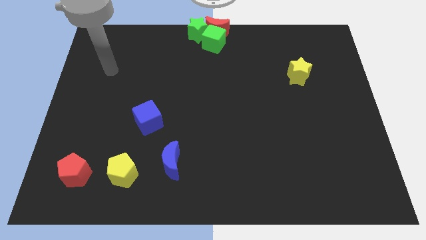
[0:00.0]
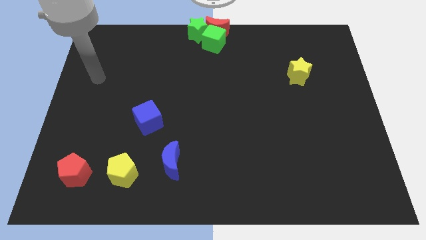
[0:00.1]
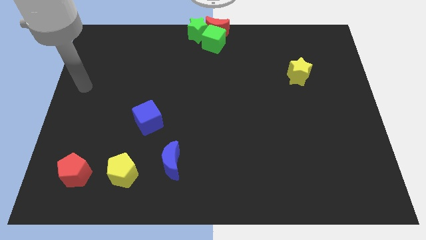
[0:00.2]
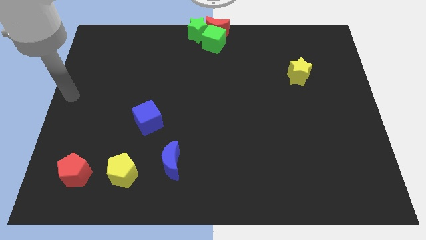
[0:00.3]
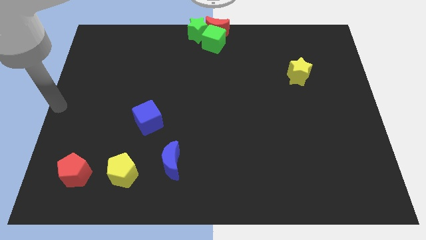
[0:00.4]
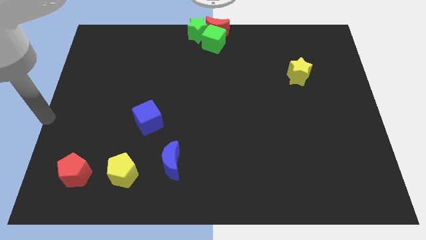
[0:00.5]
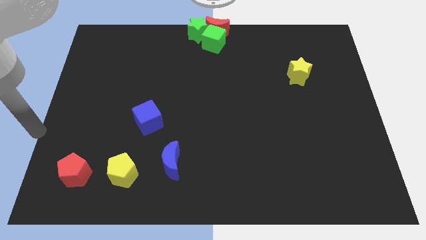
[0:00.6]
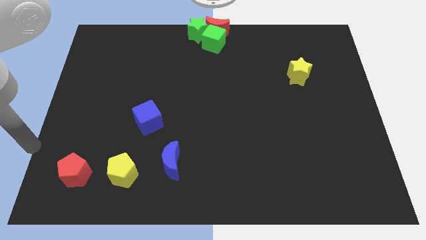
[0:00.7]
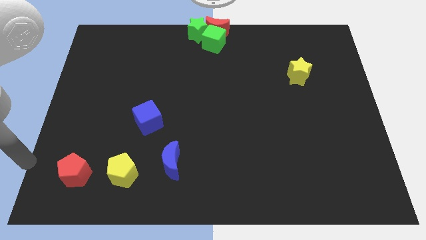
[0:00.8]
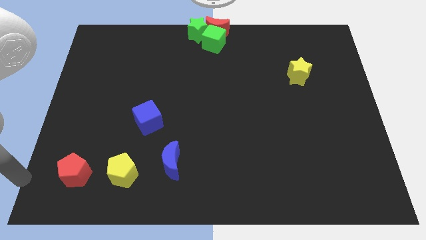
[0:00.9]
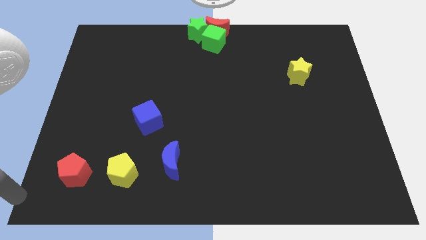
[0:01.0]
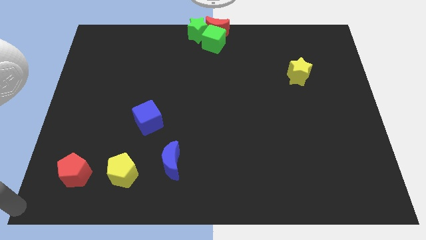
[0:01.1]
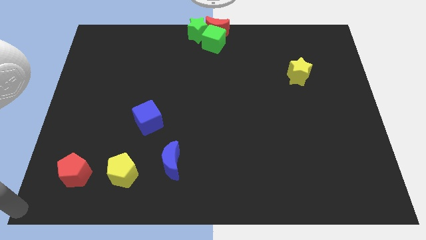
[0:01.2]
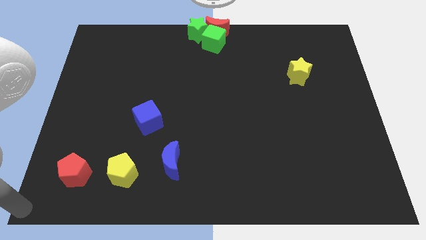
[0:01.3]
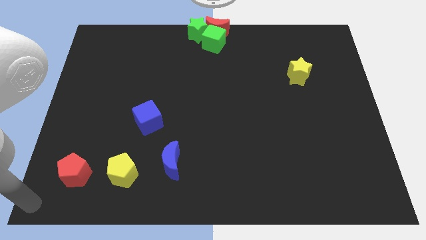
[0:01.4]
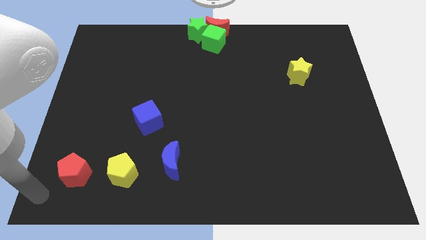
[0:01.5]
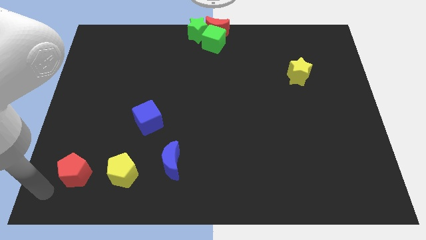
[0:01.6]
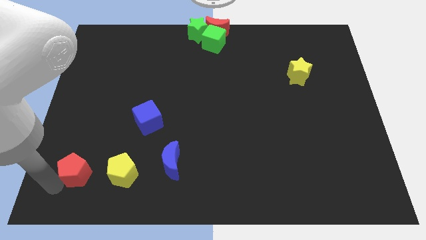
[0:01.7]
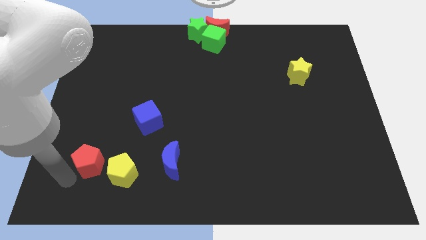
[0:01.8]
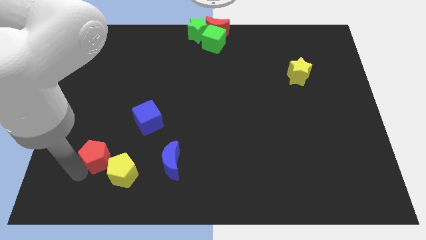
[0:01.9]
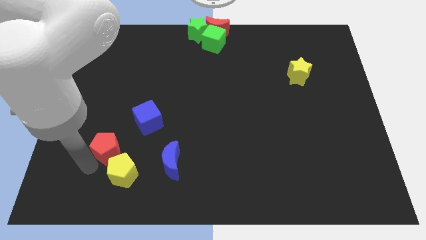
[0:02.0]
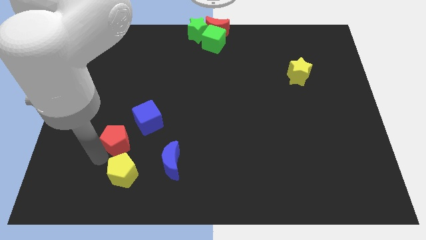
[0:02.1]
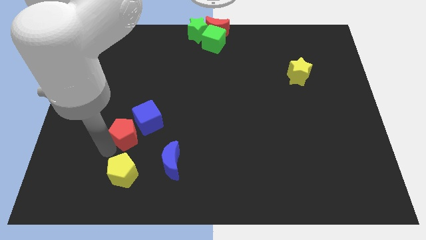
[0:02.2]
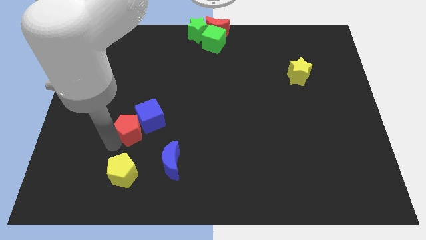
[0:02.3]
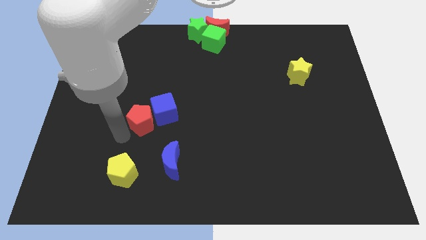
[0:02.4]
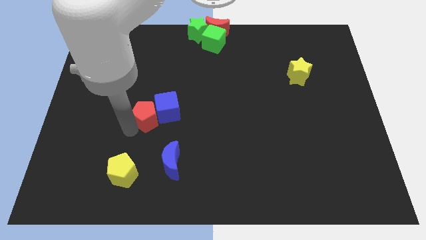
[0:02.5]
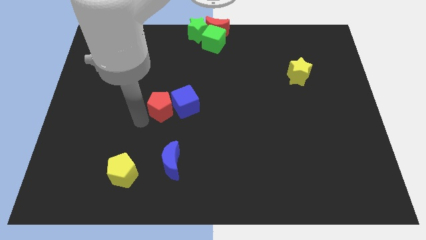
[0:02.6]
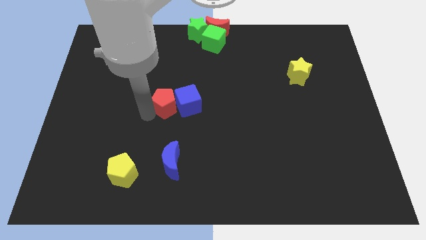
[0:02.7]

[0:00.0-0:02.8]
place red pentagon to the left of blue cube

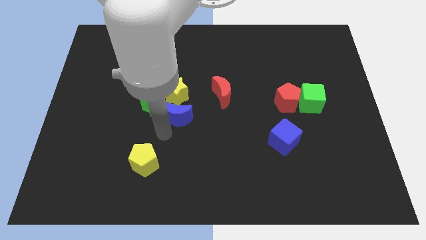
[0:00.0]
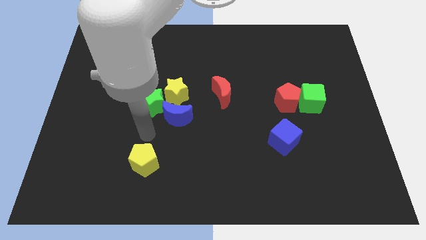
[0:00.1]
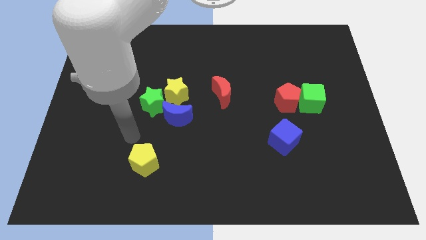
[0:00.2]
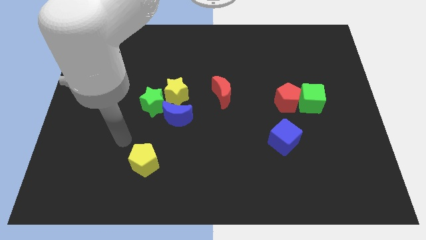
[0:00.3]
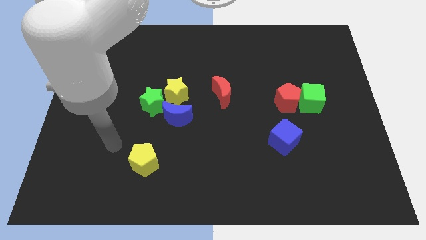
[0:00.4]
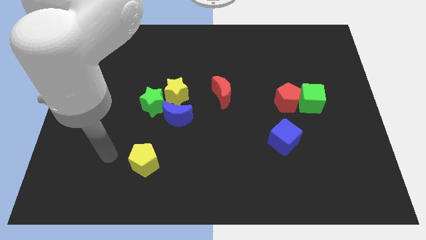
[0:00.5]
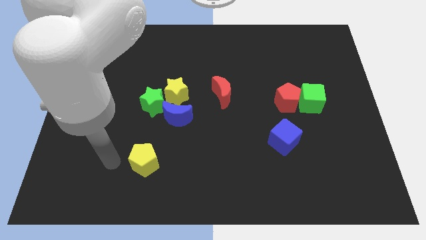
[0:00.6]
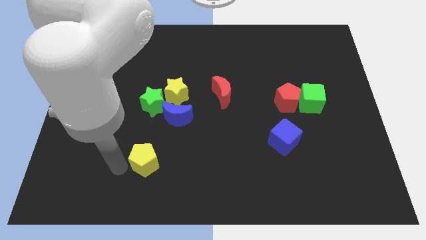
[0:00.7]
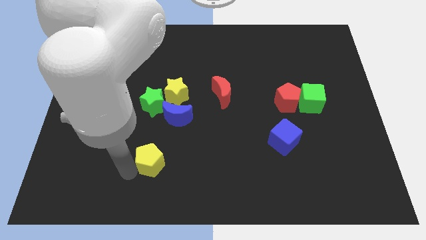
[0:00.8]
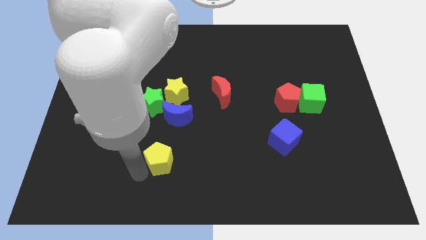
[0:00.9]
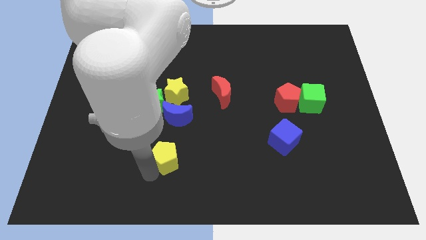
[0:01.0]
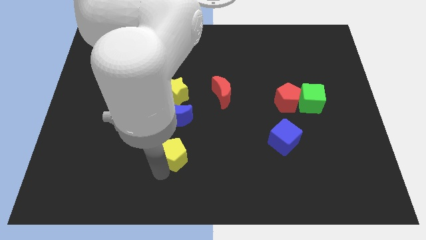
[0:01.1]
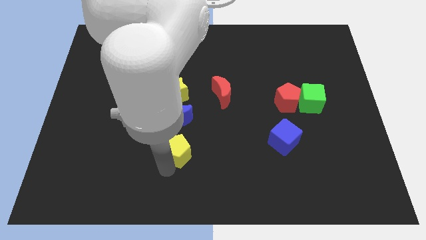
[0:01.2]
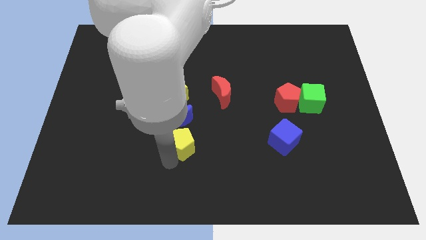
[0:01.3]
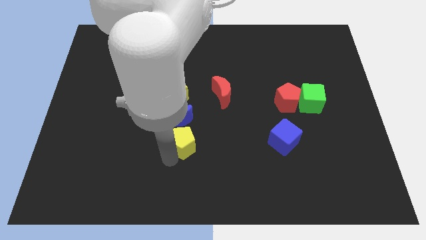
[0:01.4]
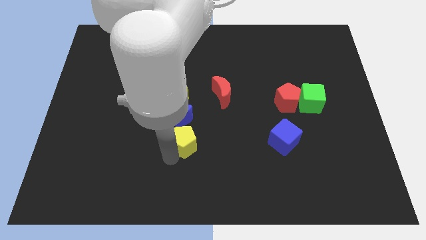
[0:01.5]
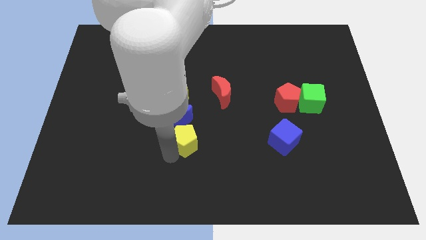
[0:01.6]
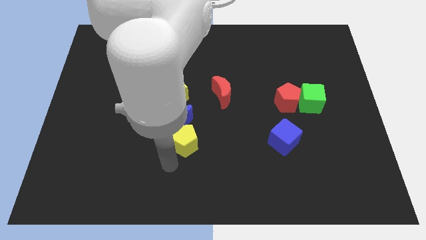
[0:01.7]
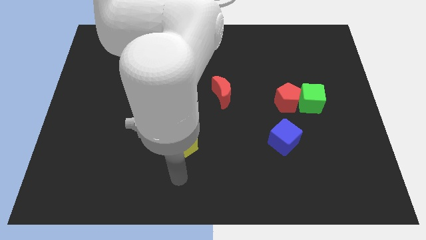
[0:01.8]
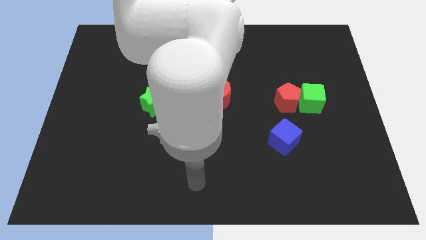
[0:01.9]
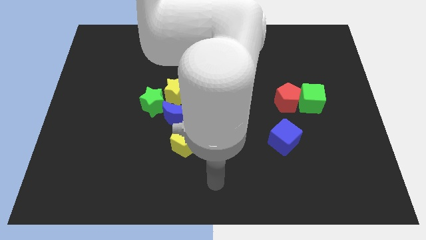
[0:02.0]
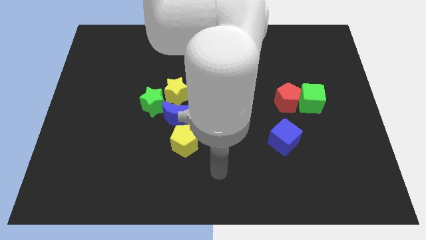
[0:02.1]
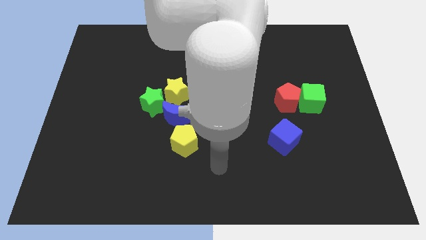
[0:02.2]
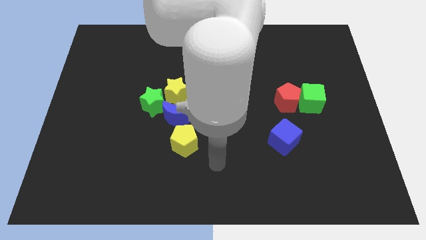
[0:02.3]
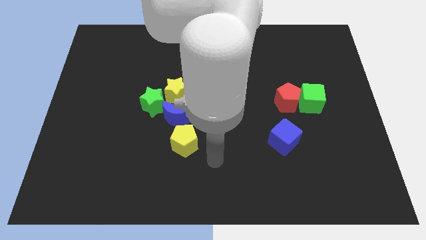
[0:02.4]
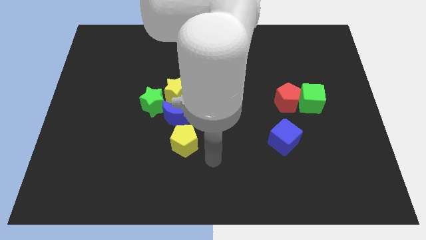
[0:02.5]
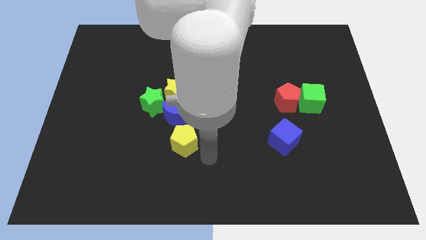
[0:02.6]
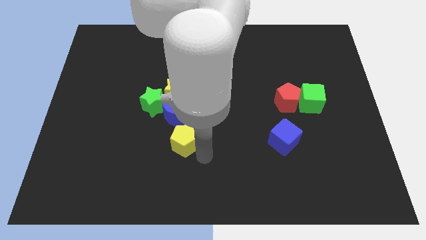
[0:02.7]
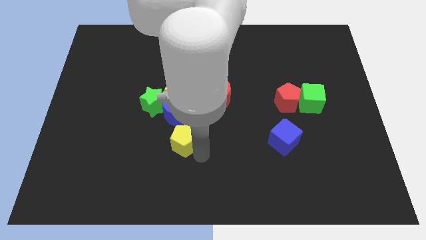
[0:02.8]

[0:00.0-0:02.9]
place the yellow pentagon below the blue moon

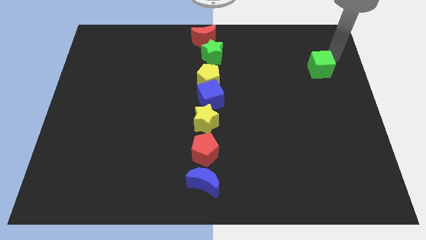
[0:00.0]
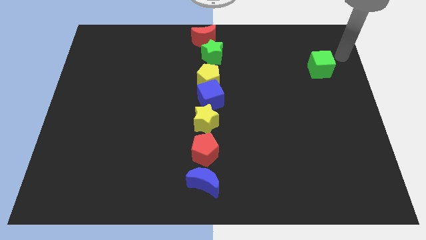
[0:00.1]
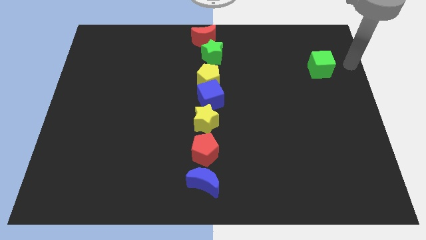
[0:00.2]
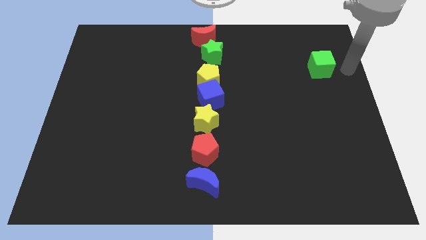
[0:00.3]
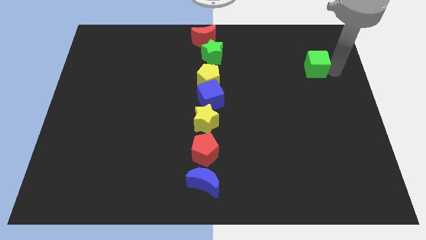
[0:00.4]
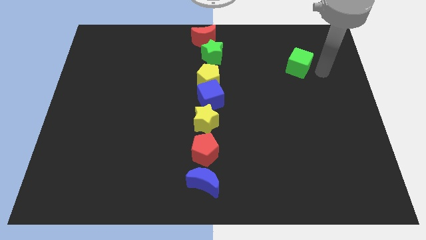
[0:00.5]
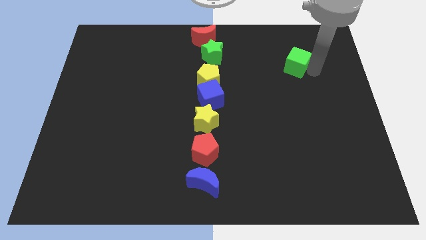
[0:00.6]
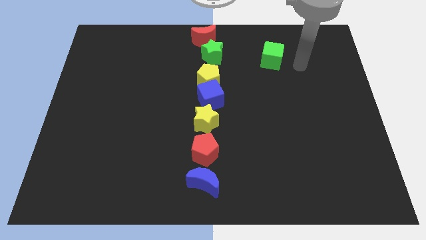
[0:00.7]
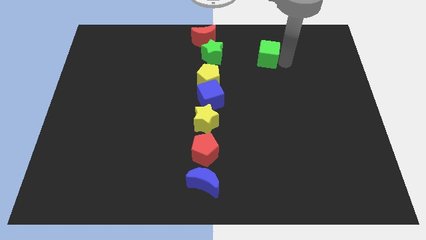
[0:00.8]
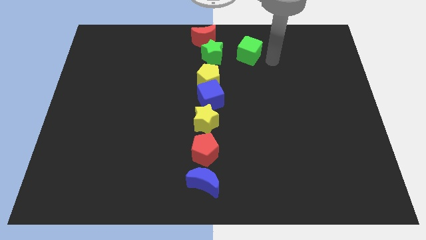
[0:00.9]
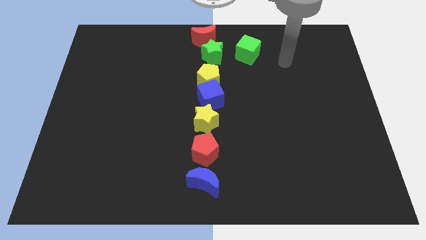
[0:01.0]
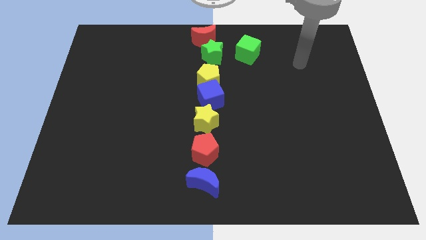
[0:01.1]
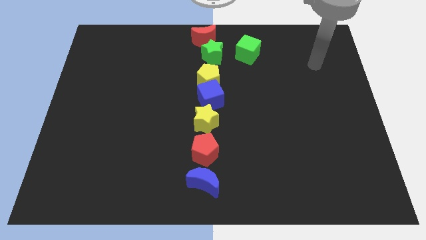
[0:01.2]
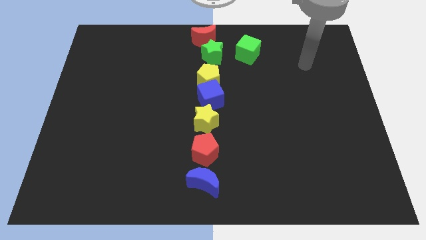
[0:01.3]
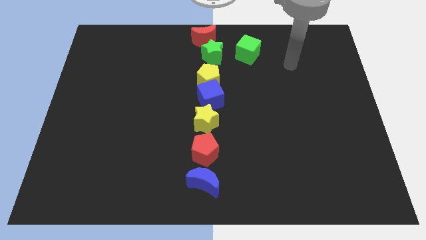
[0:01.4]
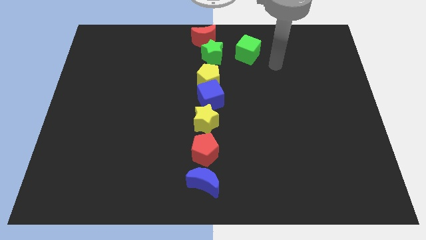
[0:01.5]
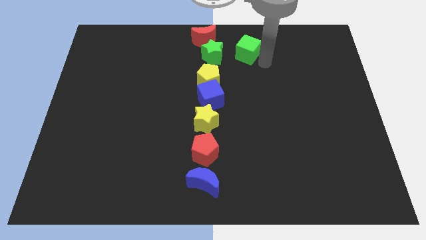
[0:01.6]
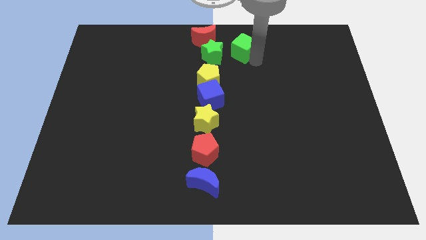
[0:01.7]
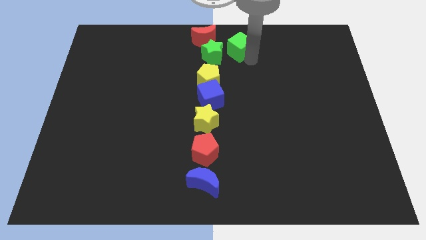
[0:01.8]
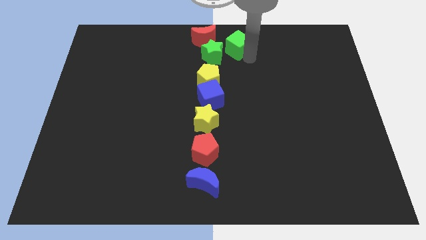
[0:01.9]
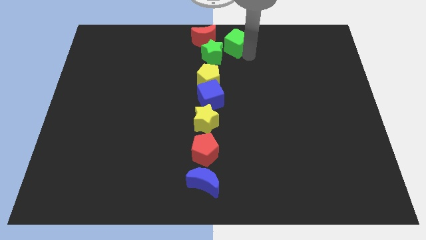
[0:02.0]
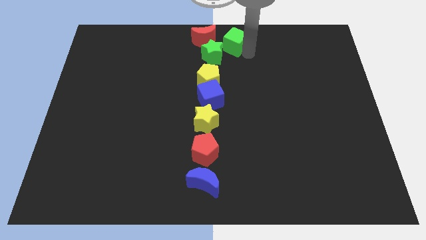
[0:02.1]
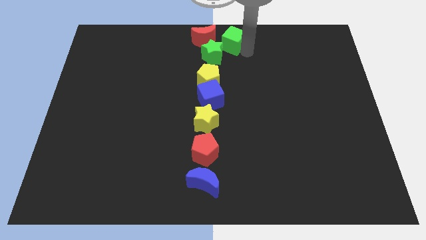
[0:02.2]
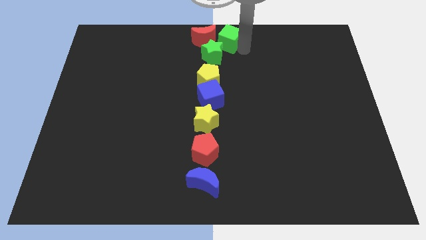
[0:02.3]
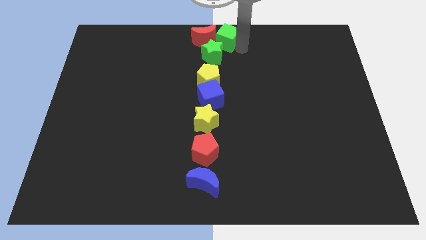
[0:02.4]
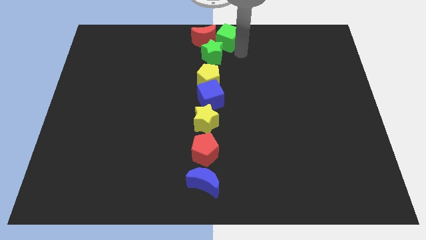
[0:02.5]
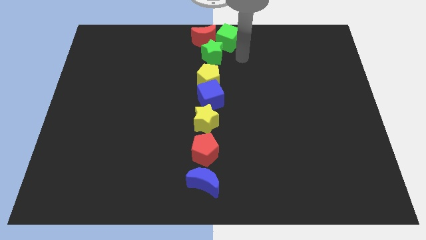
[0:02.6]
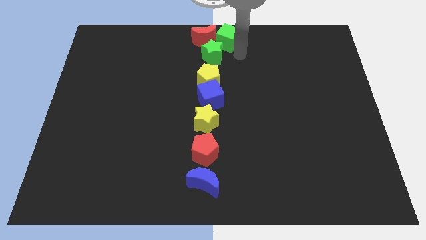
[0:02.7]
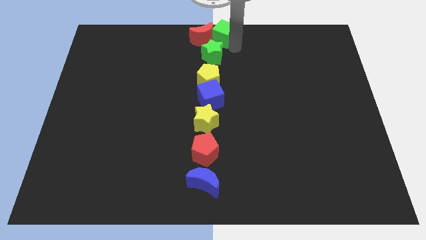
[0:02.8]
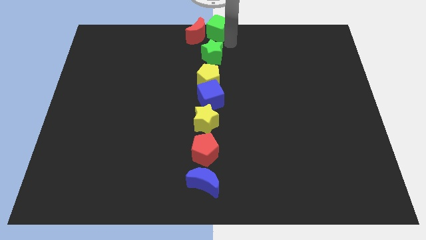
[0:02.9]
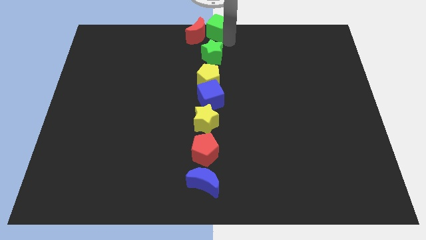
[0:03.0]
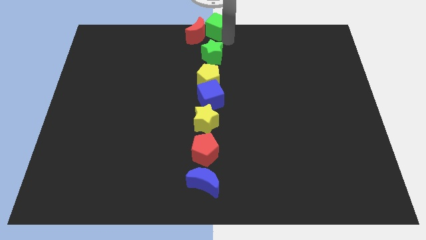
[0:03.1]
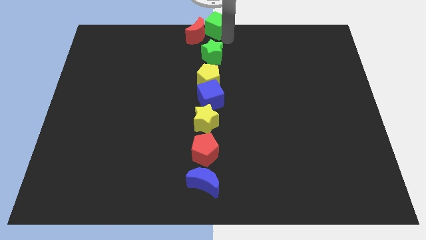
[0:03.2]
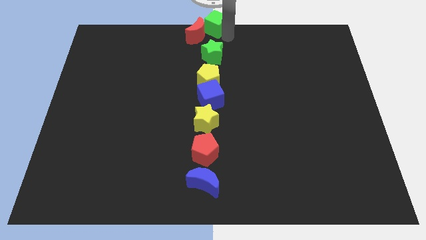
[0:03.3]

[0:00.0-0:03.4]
move green cube into the red moon
